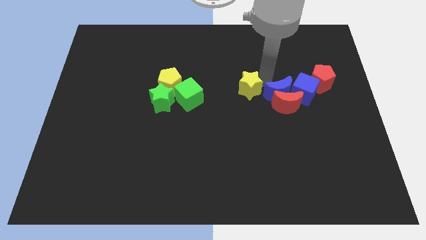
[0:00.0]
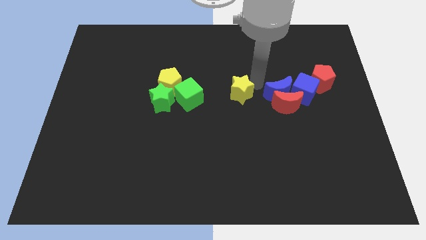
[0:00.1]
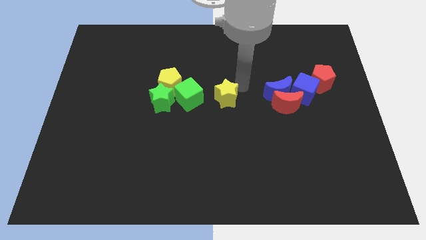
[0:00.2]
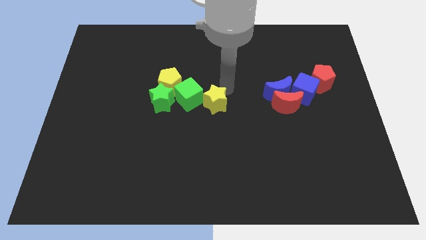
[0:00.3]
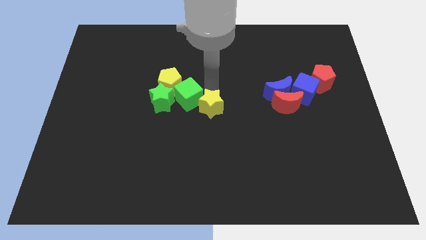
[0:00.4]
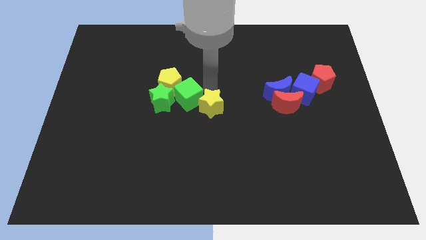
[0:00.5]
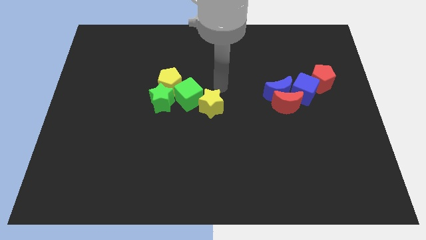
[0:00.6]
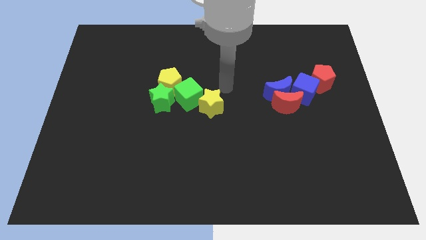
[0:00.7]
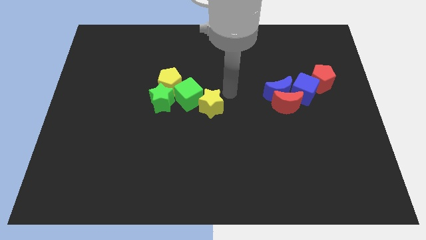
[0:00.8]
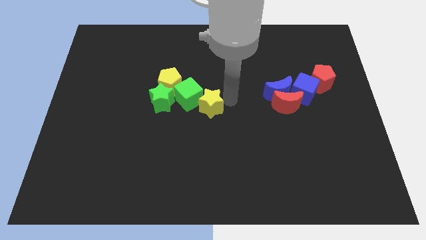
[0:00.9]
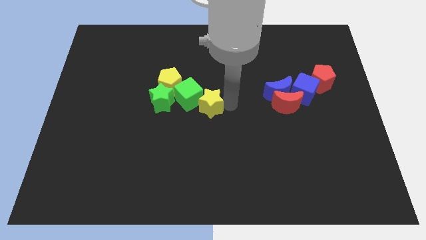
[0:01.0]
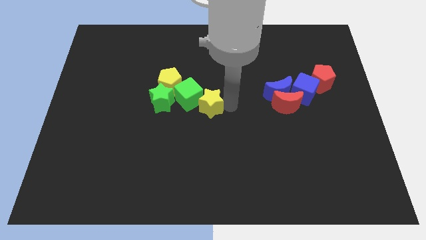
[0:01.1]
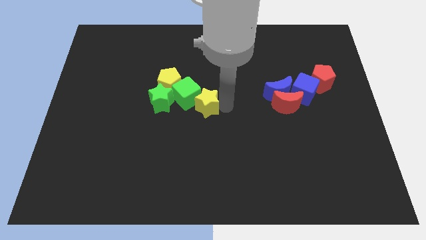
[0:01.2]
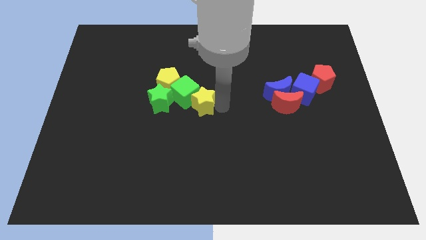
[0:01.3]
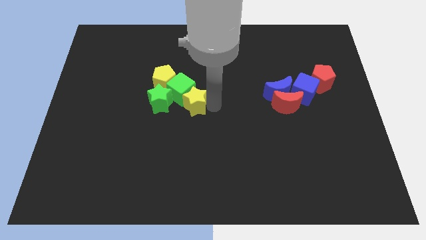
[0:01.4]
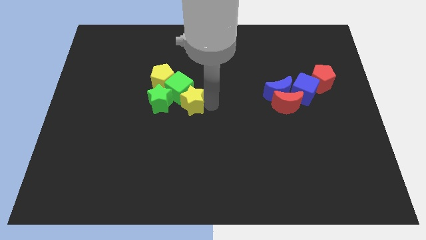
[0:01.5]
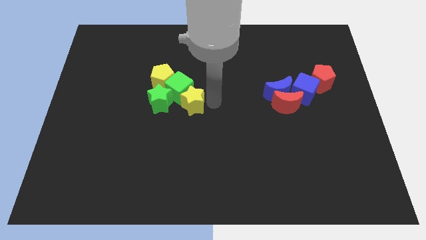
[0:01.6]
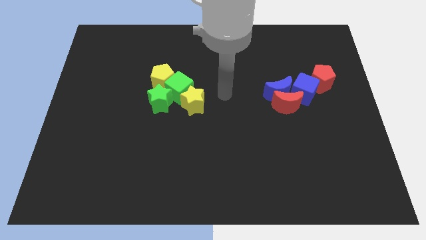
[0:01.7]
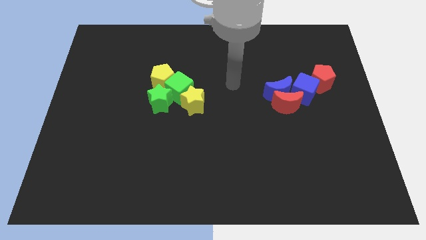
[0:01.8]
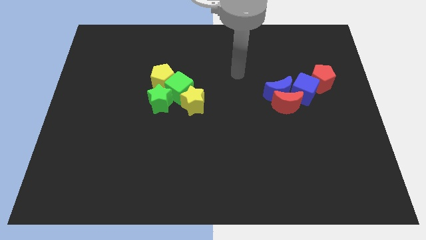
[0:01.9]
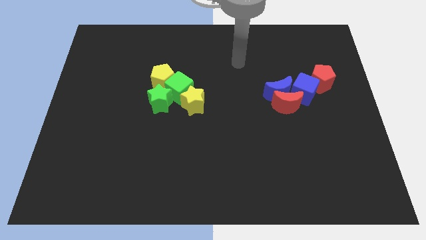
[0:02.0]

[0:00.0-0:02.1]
move the yellow star into the green cube

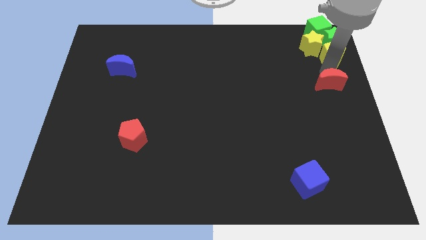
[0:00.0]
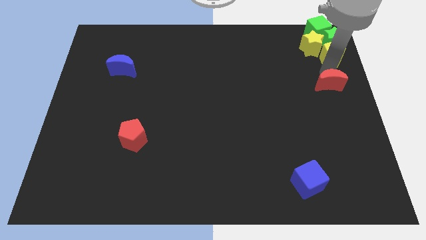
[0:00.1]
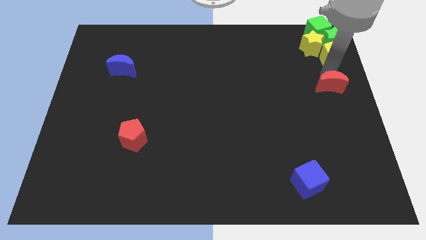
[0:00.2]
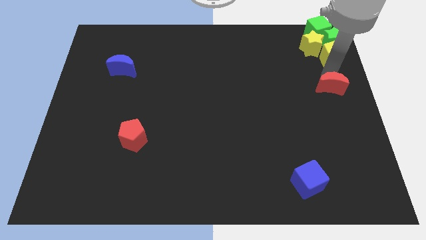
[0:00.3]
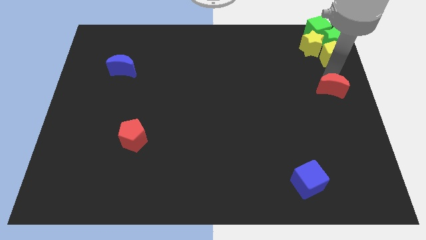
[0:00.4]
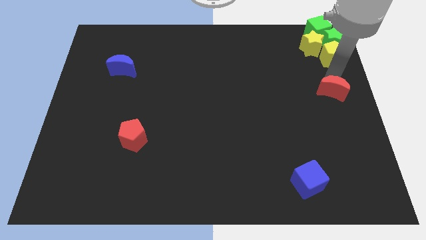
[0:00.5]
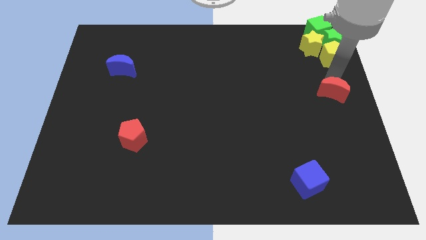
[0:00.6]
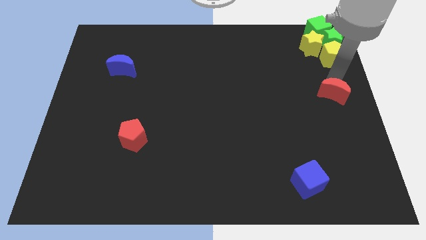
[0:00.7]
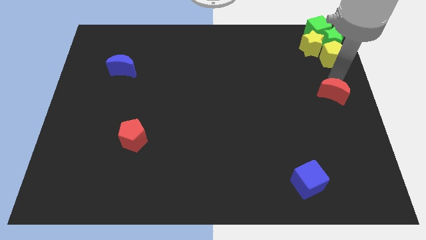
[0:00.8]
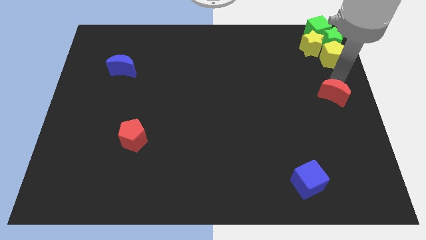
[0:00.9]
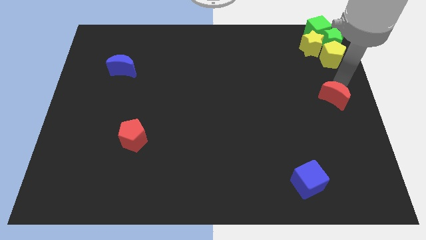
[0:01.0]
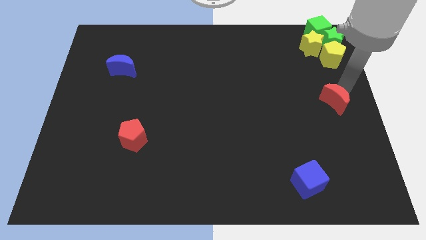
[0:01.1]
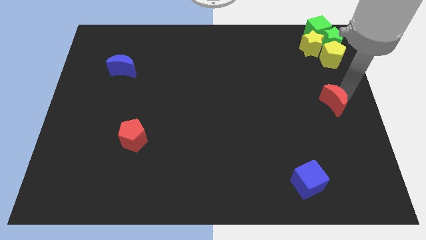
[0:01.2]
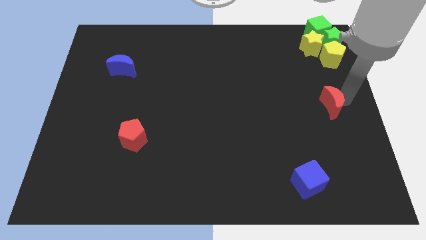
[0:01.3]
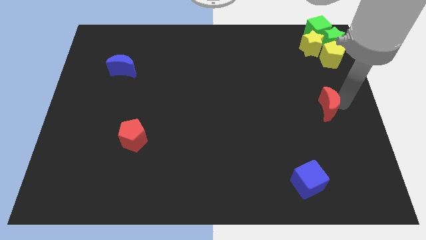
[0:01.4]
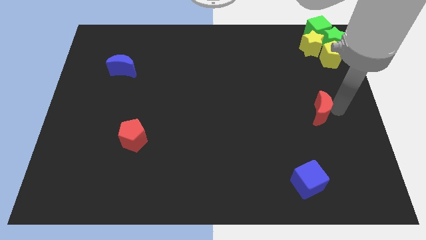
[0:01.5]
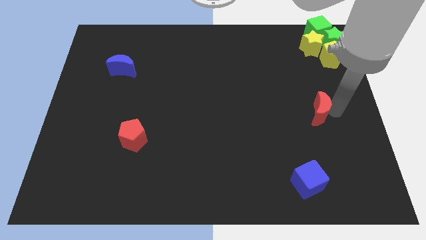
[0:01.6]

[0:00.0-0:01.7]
push the red crescent slightly downwards

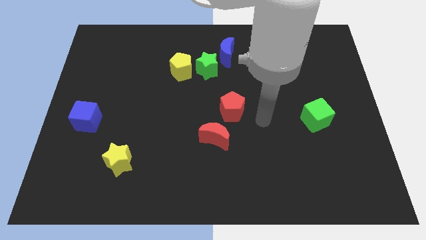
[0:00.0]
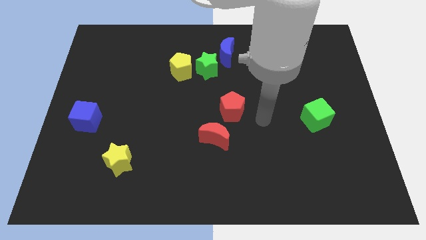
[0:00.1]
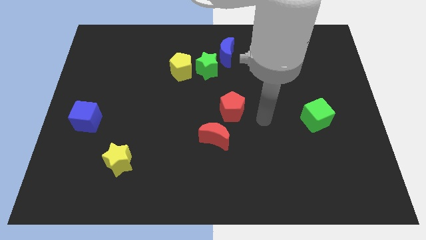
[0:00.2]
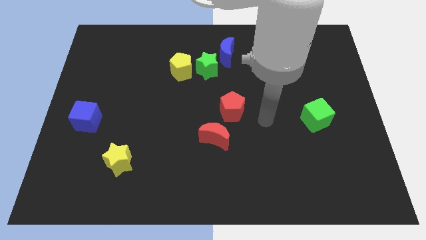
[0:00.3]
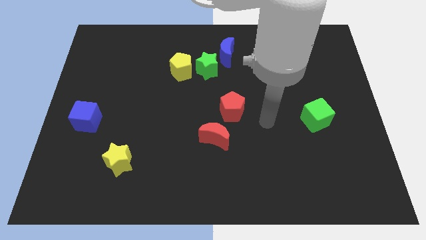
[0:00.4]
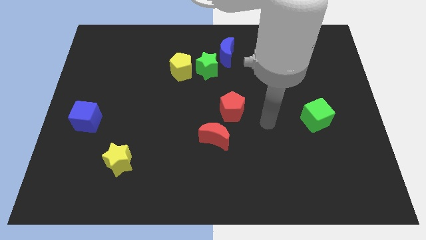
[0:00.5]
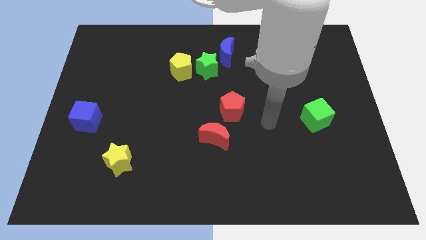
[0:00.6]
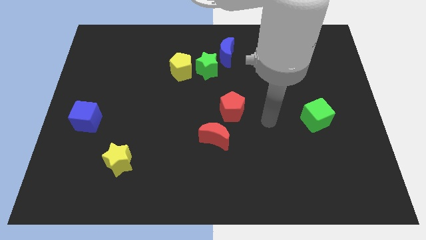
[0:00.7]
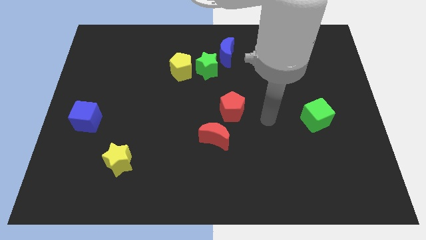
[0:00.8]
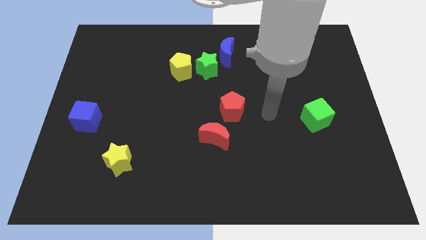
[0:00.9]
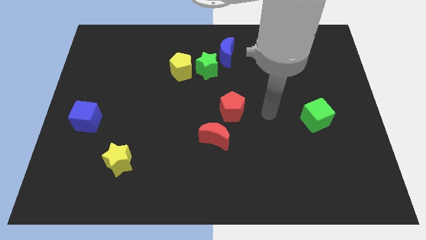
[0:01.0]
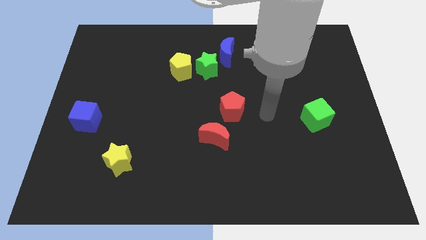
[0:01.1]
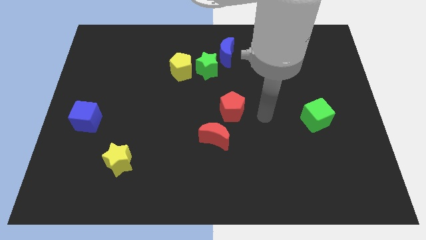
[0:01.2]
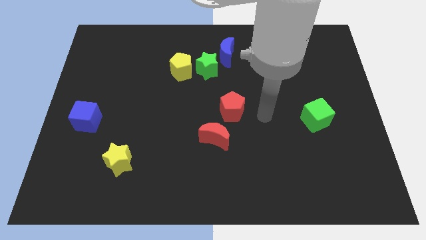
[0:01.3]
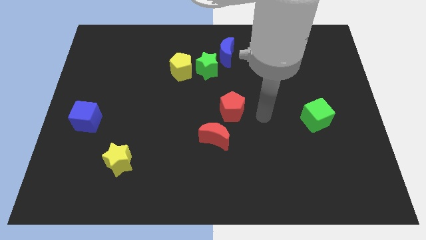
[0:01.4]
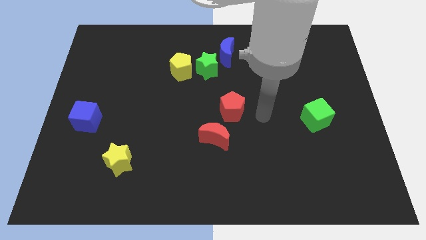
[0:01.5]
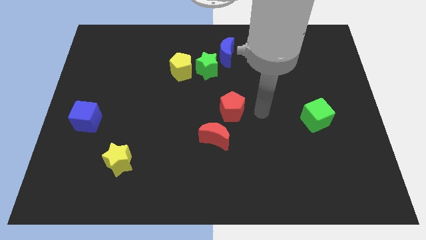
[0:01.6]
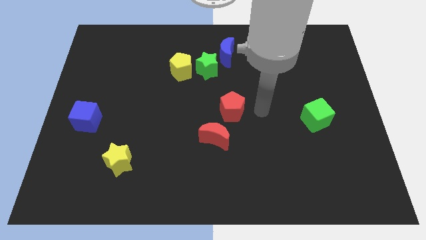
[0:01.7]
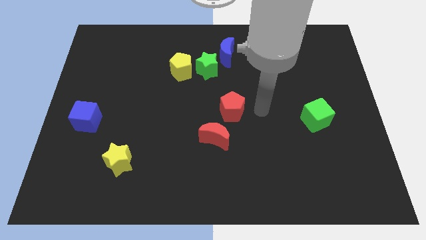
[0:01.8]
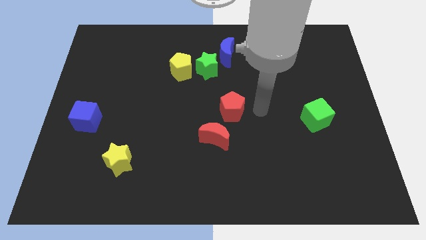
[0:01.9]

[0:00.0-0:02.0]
place your arm to the right side of the red pentagon

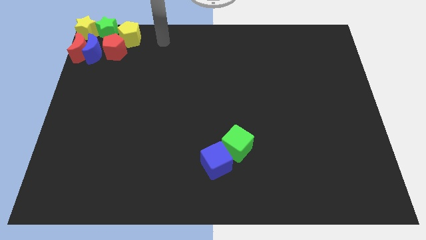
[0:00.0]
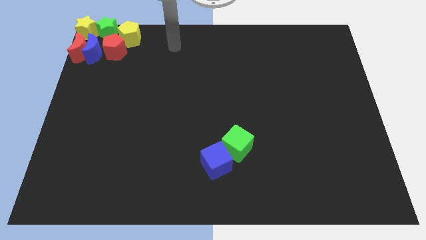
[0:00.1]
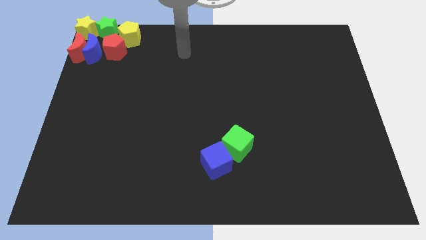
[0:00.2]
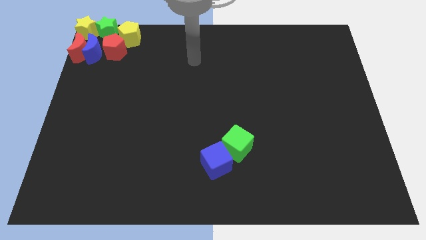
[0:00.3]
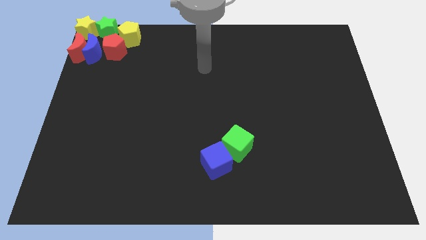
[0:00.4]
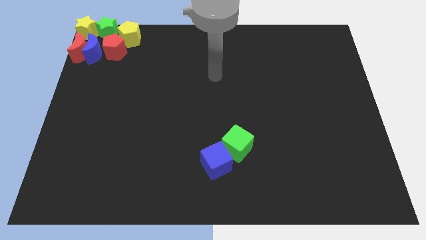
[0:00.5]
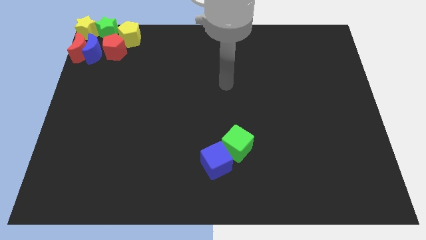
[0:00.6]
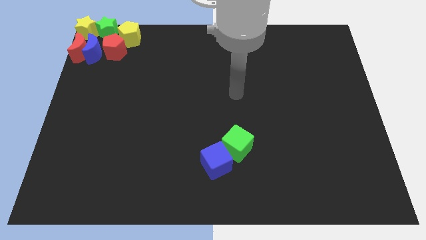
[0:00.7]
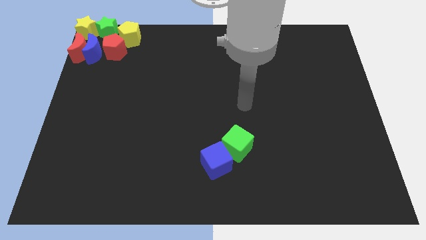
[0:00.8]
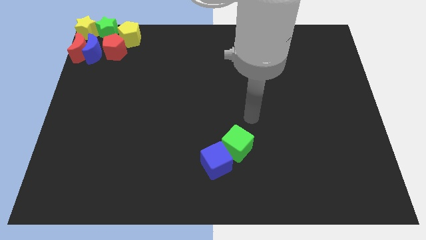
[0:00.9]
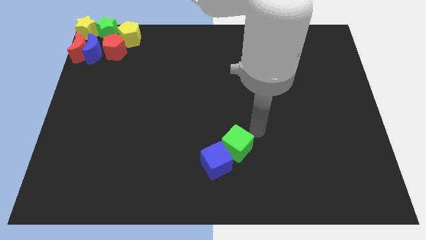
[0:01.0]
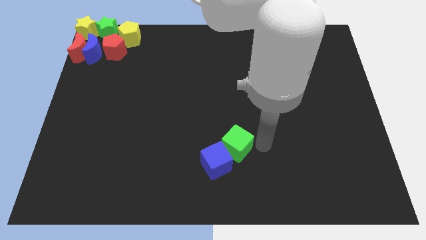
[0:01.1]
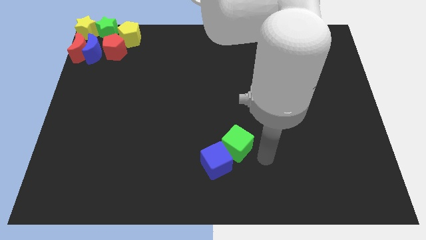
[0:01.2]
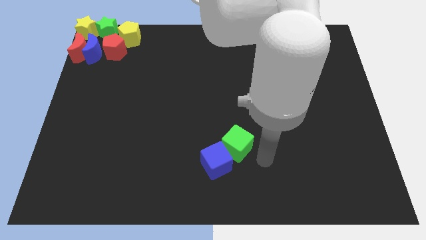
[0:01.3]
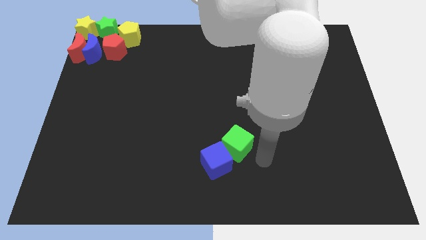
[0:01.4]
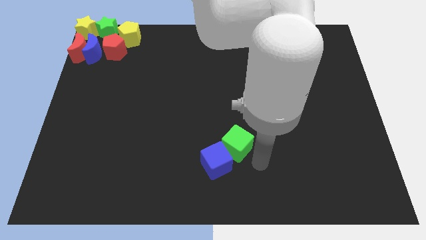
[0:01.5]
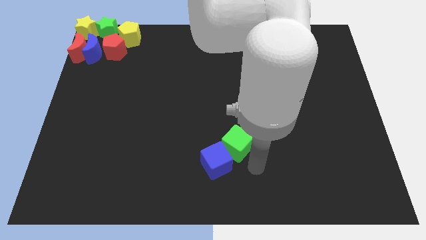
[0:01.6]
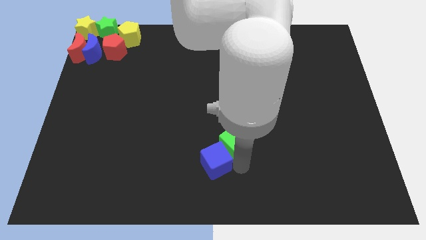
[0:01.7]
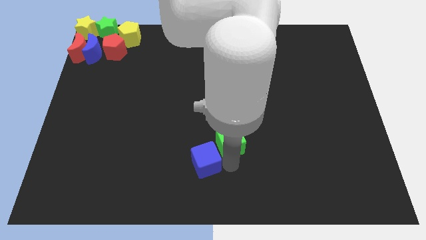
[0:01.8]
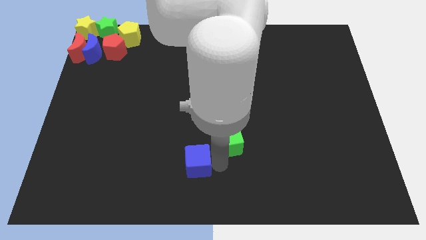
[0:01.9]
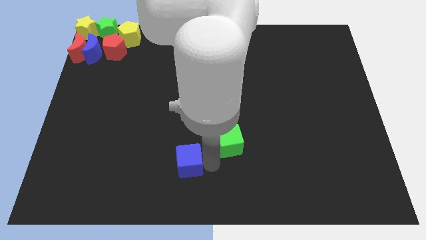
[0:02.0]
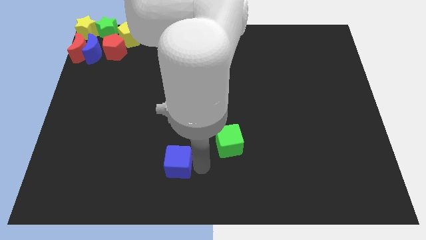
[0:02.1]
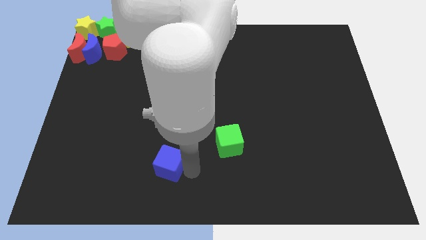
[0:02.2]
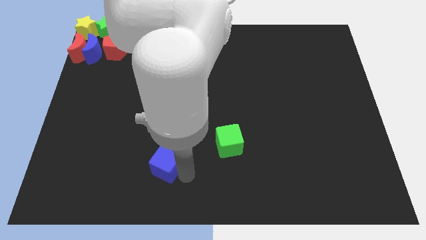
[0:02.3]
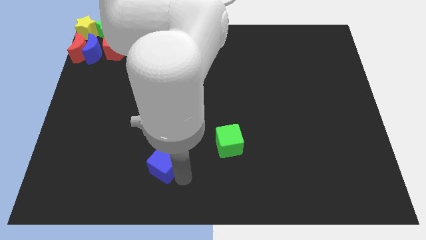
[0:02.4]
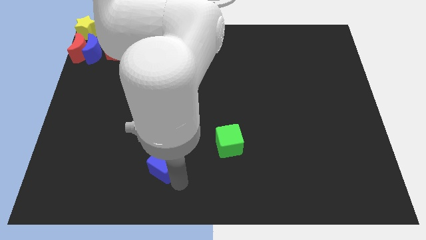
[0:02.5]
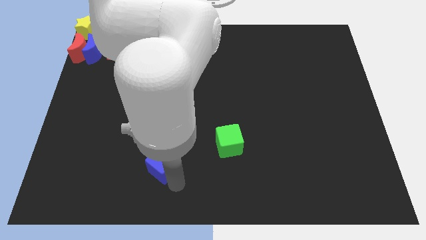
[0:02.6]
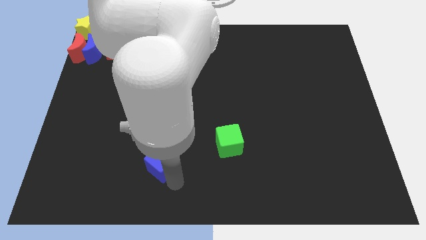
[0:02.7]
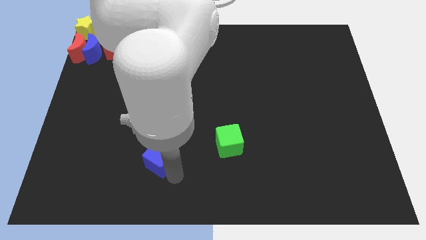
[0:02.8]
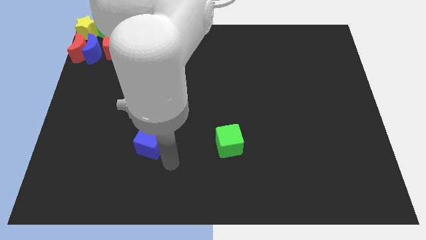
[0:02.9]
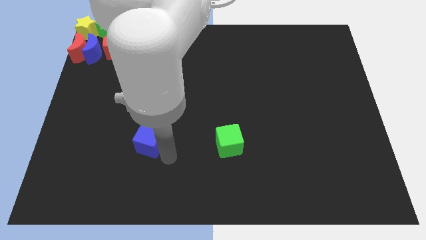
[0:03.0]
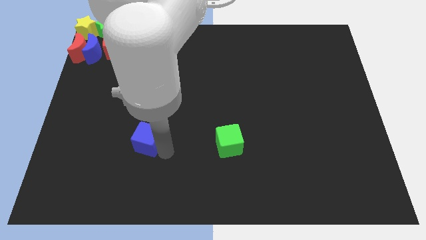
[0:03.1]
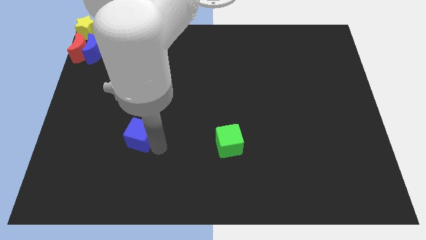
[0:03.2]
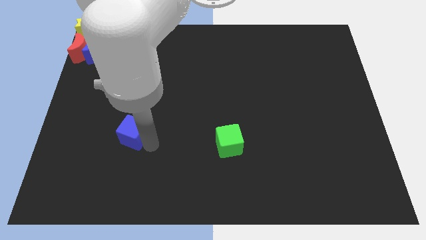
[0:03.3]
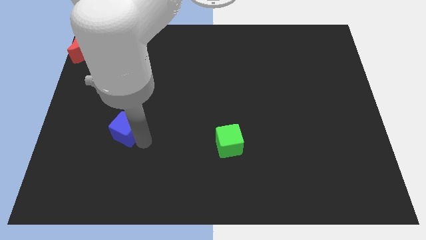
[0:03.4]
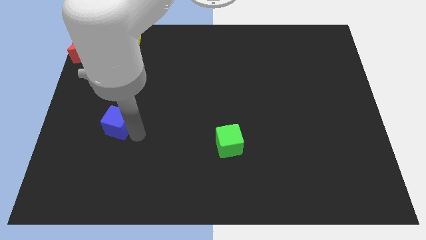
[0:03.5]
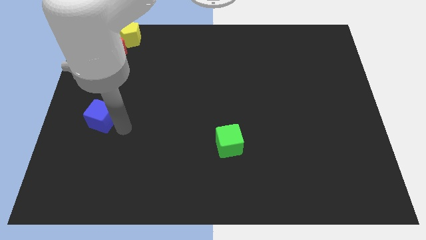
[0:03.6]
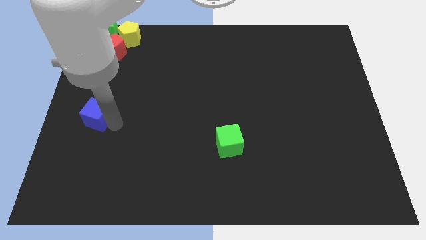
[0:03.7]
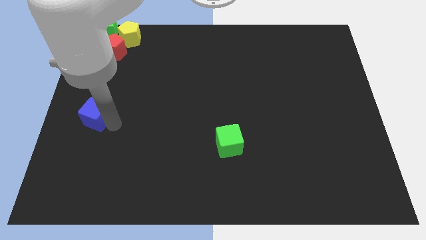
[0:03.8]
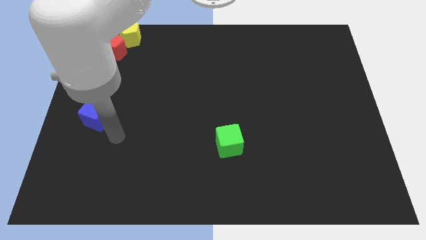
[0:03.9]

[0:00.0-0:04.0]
separate the blue cube from the green cube
